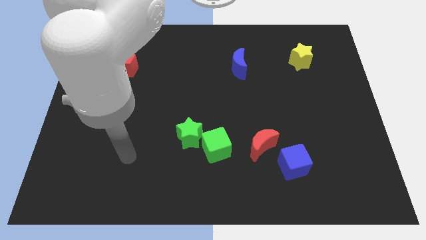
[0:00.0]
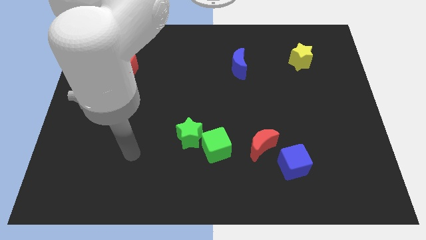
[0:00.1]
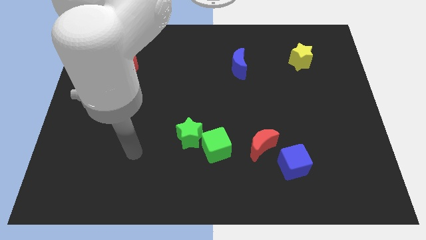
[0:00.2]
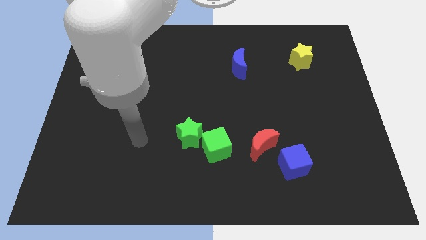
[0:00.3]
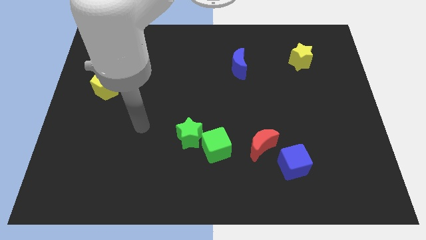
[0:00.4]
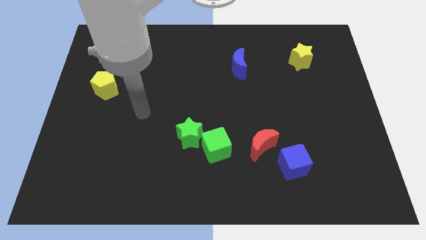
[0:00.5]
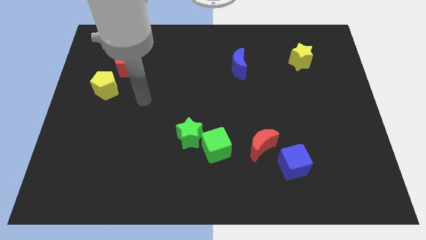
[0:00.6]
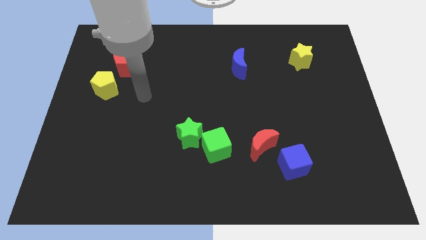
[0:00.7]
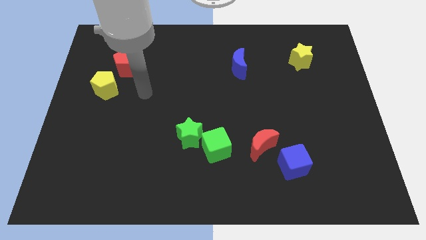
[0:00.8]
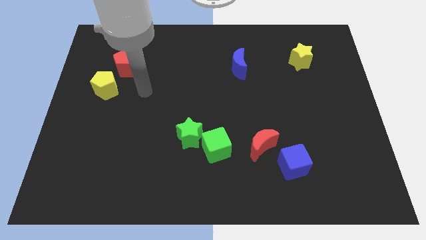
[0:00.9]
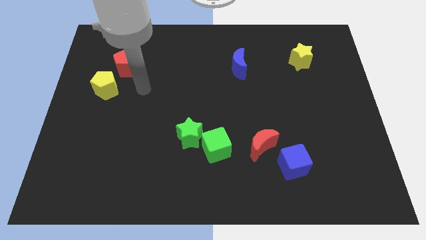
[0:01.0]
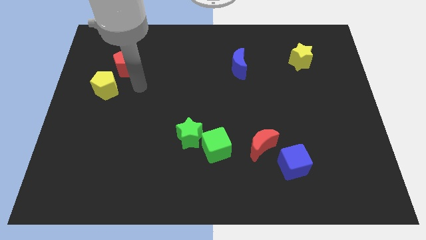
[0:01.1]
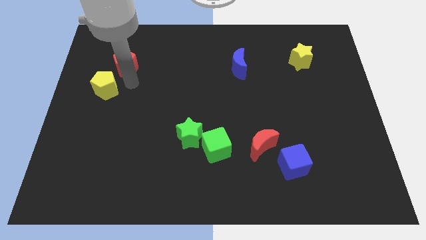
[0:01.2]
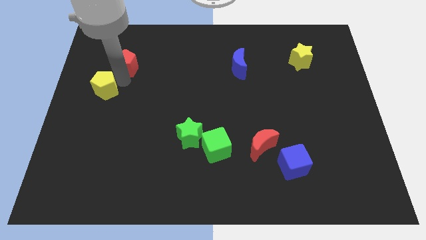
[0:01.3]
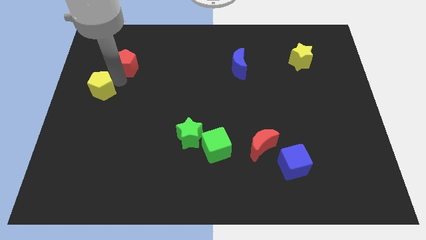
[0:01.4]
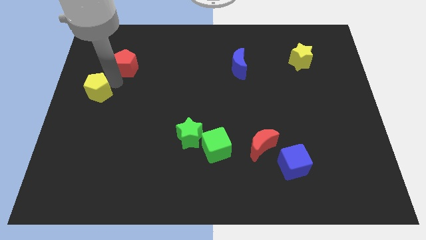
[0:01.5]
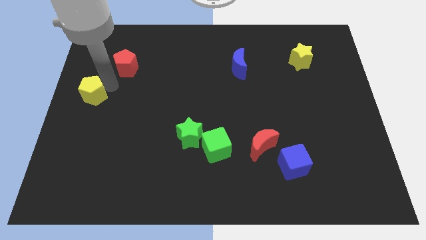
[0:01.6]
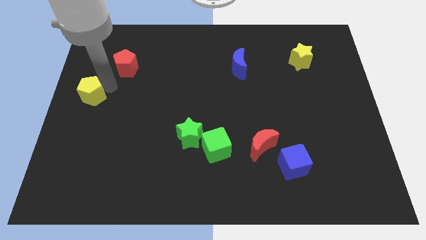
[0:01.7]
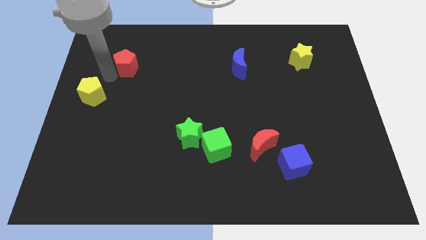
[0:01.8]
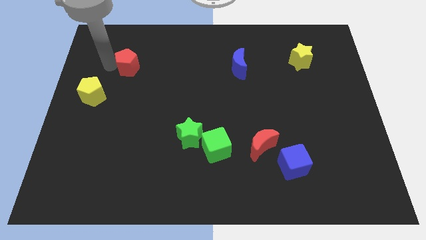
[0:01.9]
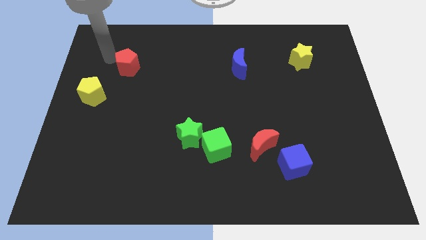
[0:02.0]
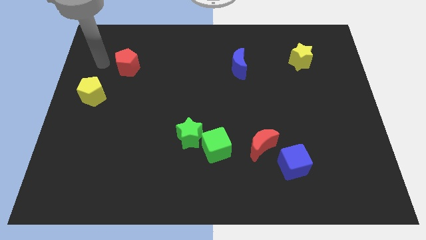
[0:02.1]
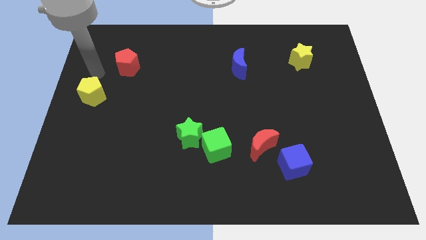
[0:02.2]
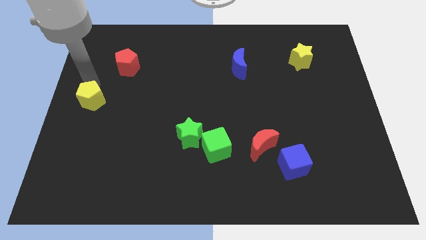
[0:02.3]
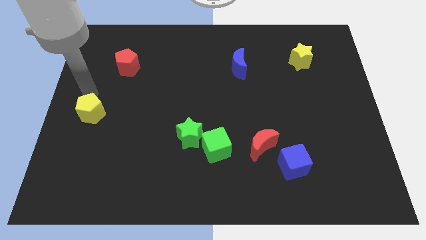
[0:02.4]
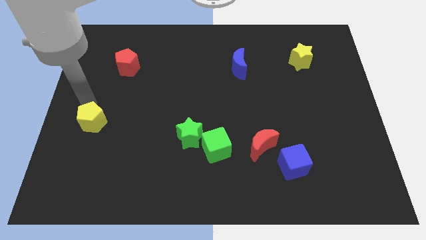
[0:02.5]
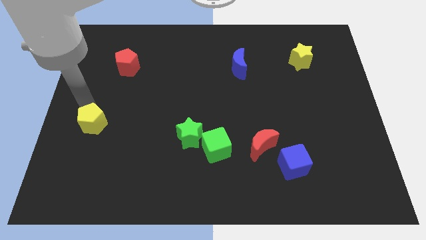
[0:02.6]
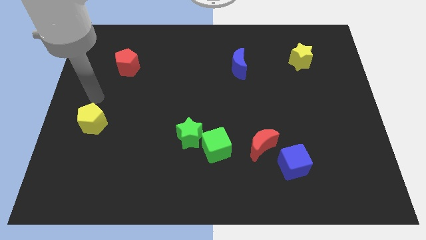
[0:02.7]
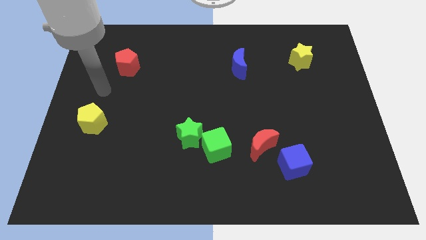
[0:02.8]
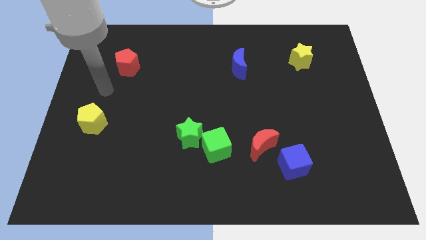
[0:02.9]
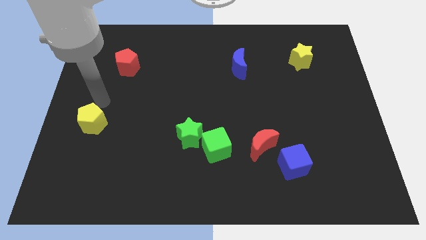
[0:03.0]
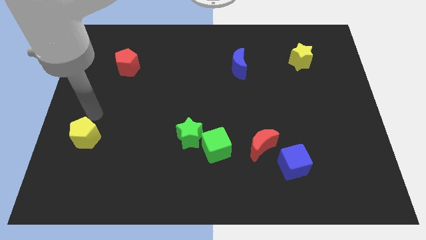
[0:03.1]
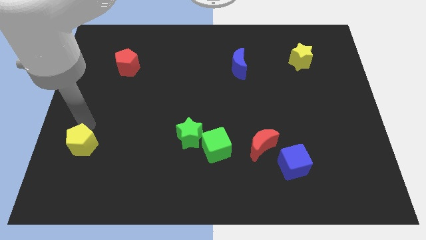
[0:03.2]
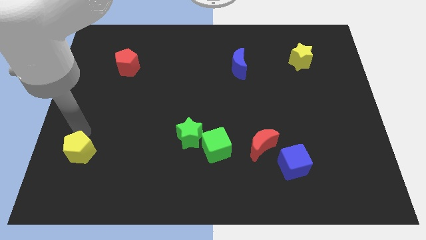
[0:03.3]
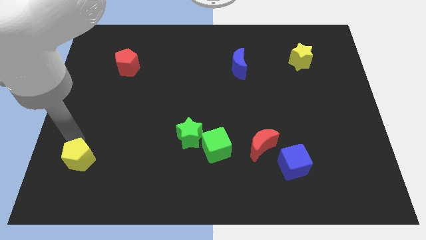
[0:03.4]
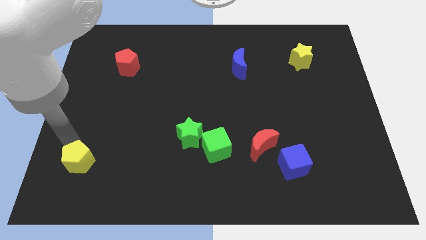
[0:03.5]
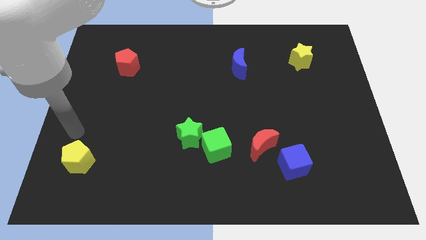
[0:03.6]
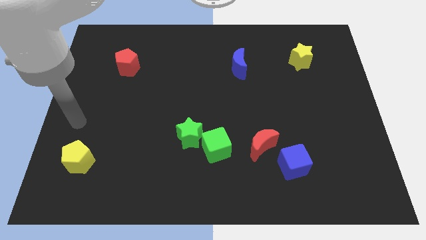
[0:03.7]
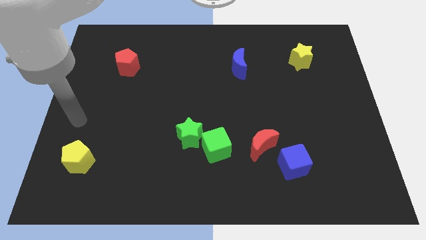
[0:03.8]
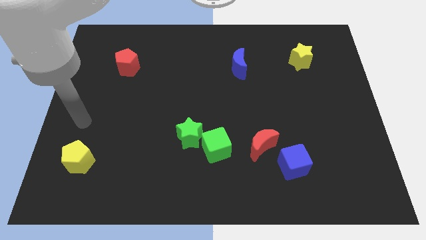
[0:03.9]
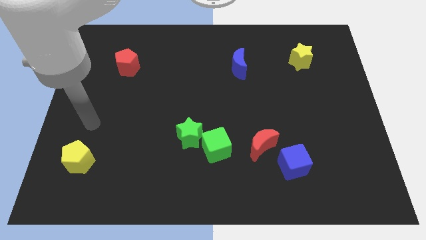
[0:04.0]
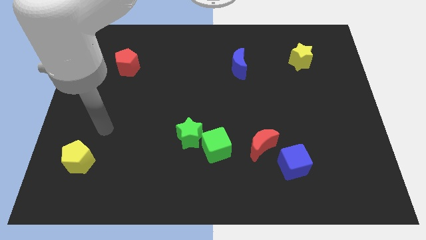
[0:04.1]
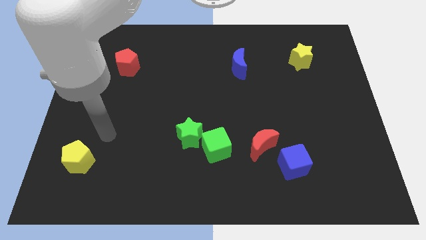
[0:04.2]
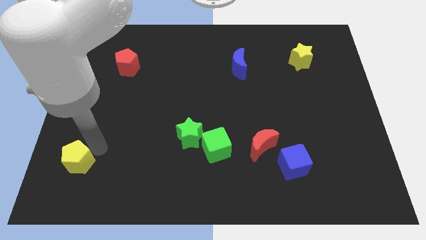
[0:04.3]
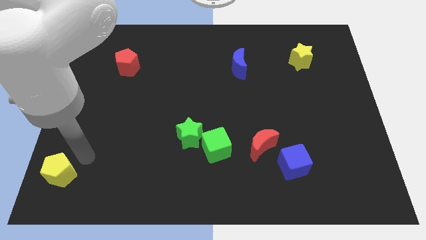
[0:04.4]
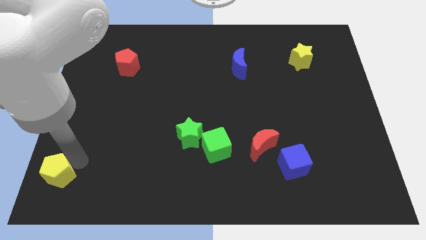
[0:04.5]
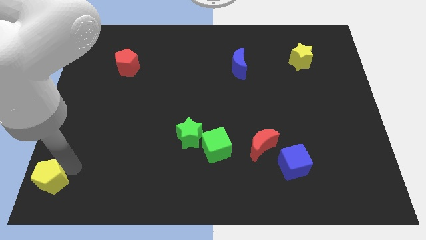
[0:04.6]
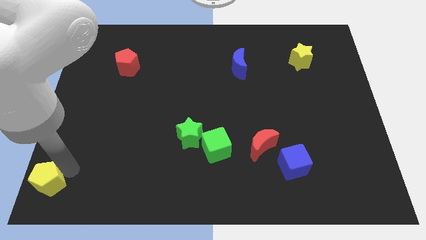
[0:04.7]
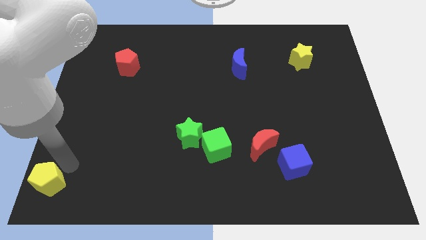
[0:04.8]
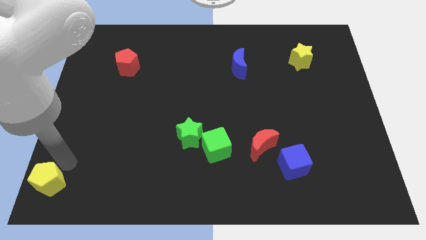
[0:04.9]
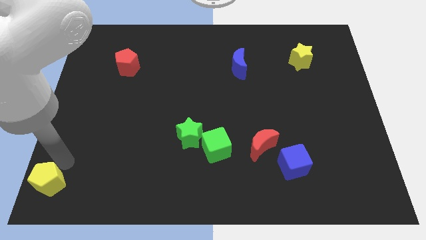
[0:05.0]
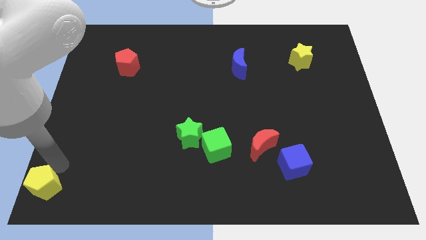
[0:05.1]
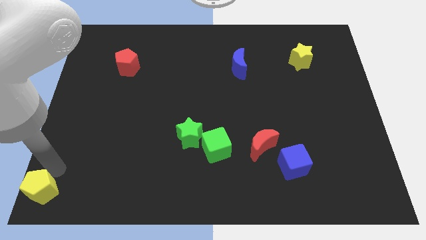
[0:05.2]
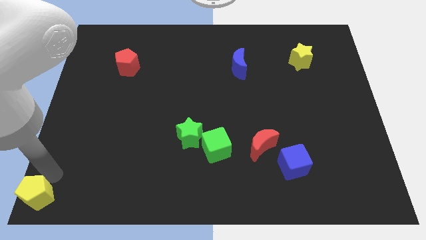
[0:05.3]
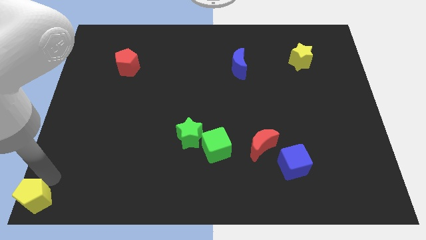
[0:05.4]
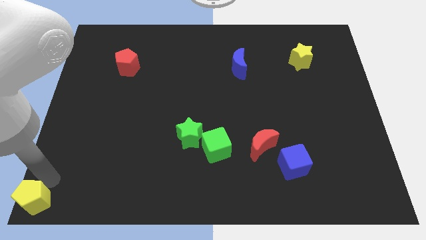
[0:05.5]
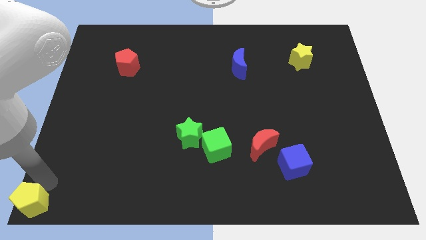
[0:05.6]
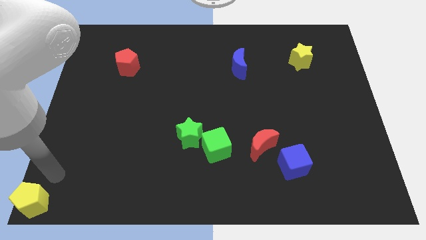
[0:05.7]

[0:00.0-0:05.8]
push the yellow pentagon to the left bottom corner of the board

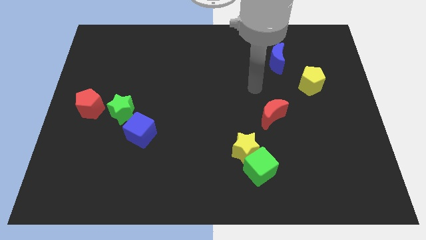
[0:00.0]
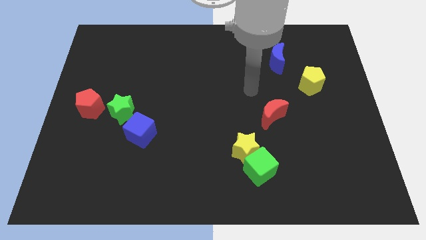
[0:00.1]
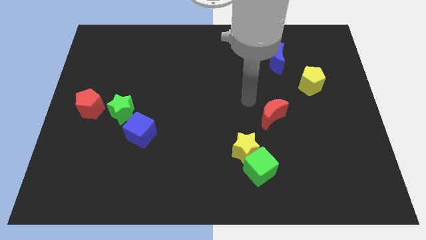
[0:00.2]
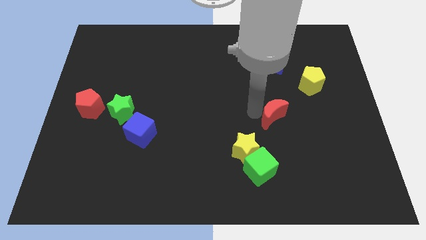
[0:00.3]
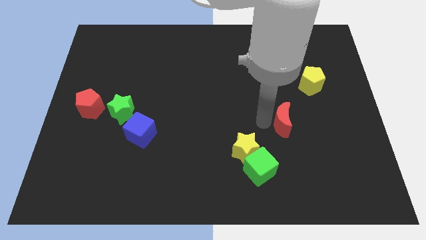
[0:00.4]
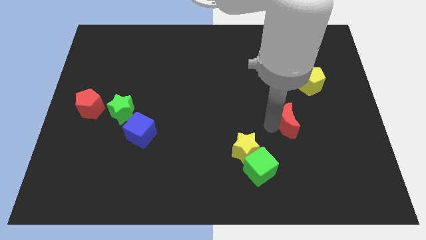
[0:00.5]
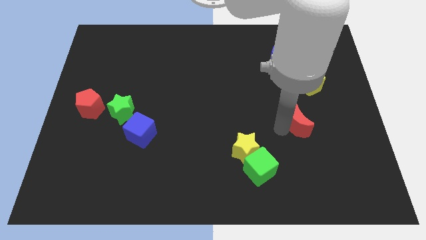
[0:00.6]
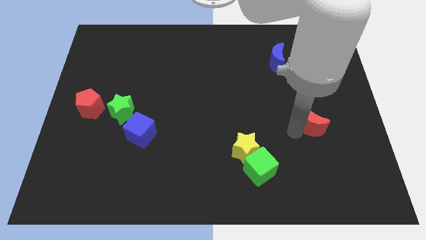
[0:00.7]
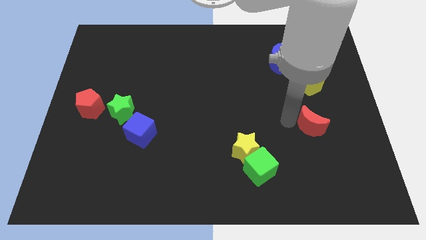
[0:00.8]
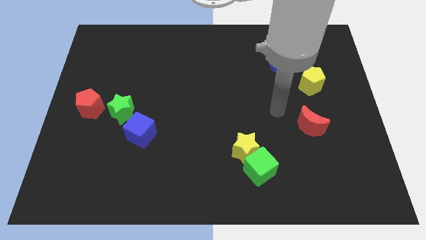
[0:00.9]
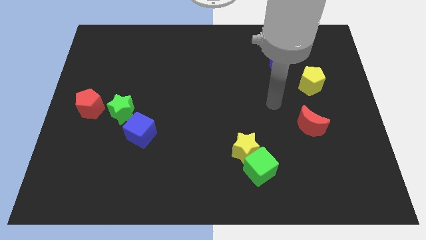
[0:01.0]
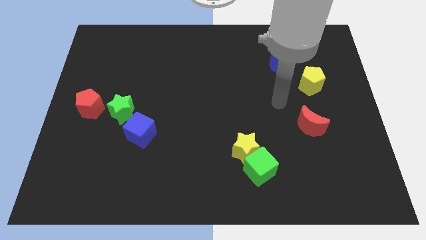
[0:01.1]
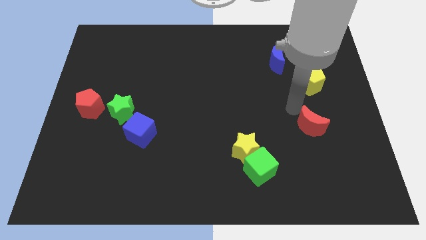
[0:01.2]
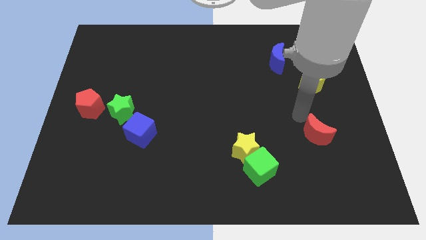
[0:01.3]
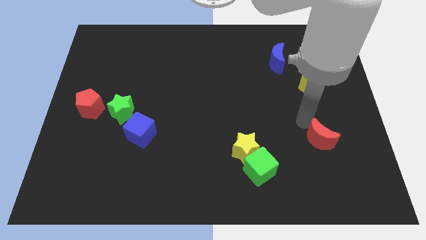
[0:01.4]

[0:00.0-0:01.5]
push red crescent below yellow pentagon

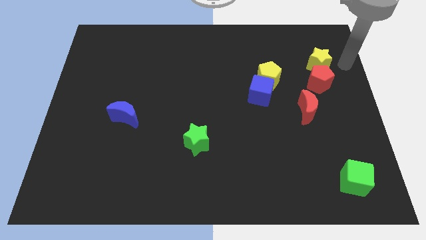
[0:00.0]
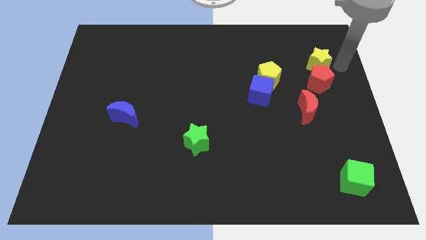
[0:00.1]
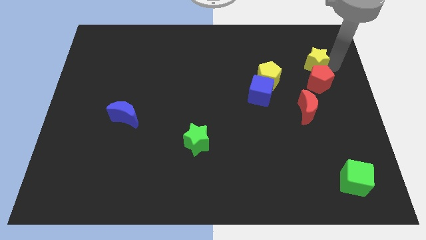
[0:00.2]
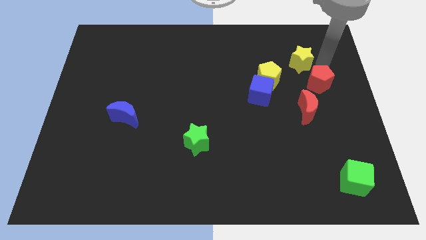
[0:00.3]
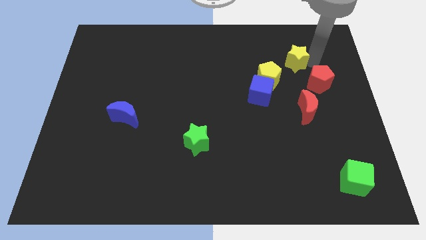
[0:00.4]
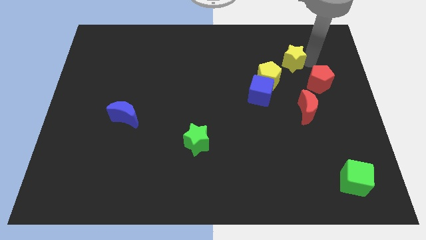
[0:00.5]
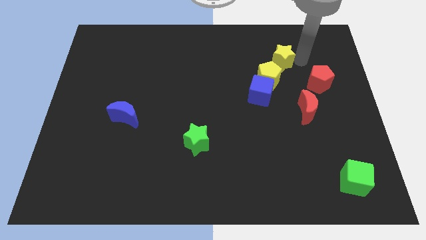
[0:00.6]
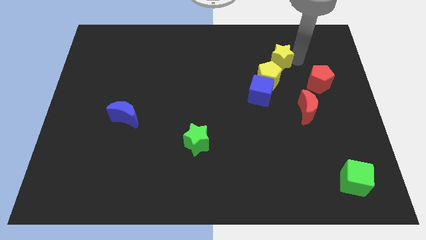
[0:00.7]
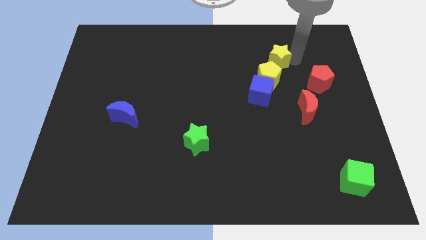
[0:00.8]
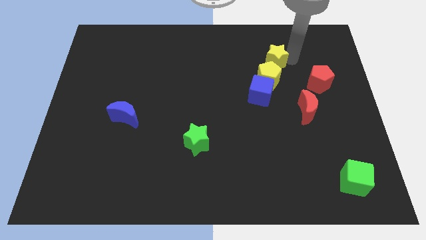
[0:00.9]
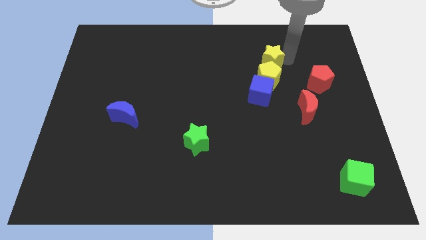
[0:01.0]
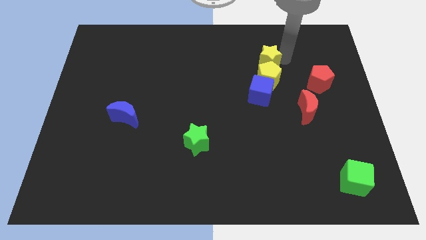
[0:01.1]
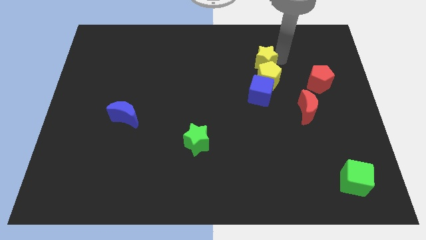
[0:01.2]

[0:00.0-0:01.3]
push the yellow star to the top of the yellow pentagon

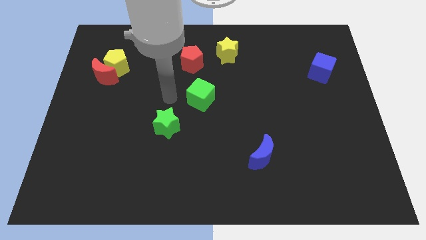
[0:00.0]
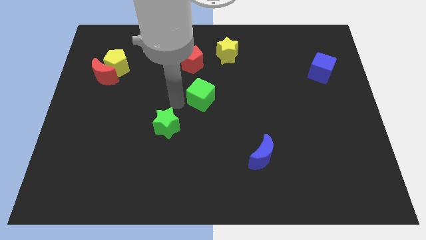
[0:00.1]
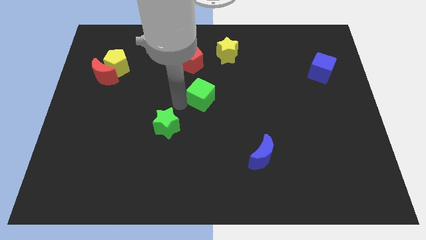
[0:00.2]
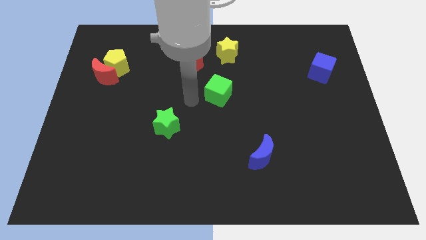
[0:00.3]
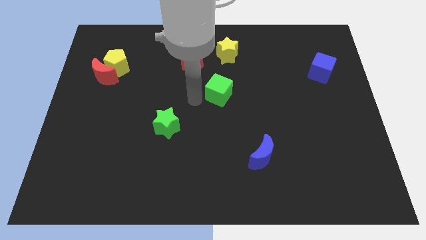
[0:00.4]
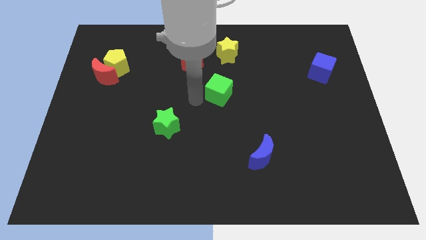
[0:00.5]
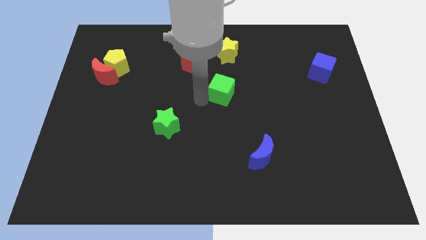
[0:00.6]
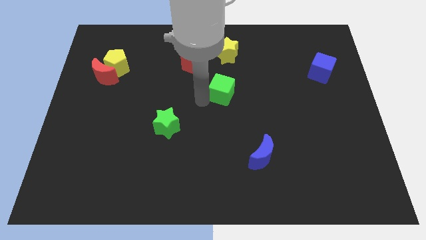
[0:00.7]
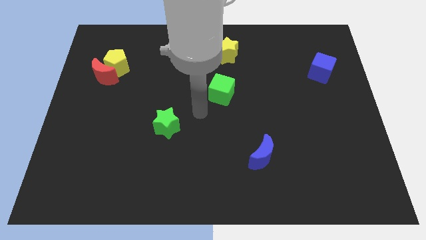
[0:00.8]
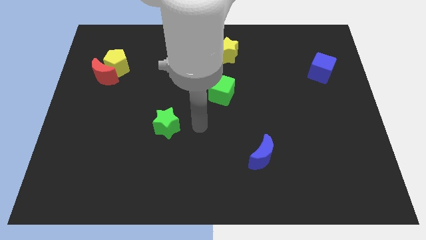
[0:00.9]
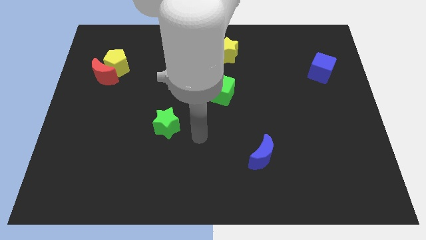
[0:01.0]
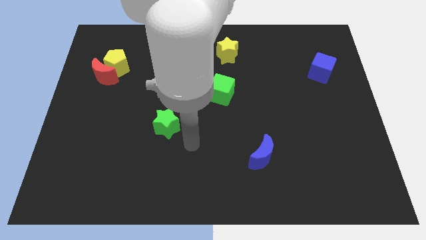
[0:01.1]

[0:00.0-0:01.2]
move the green cube to the center of the board
